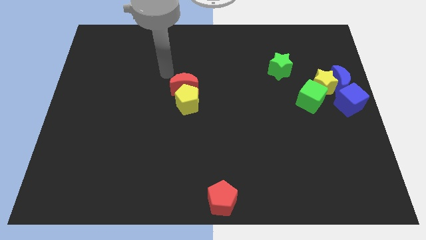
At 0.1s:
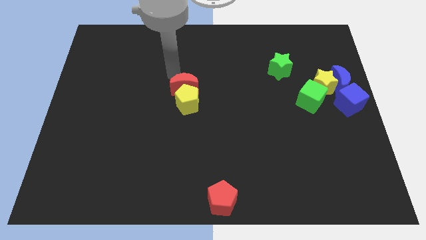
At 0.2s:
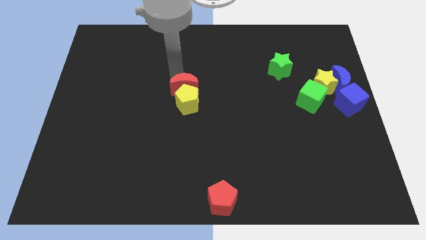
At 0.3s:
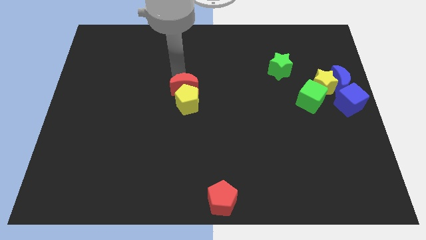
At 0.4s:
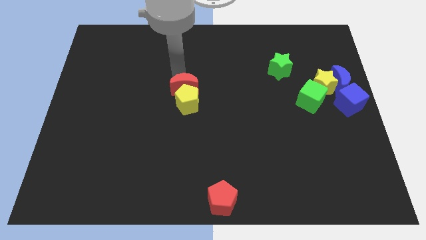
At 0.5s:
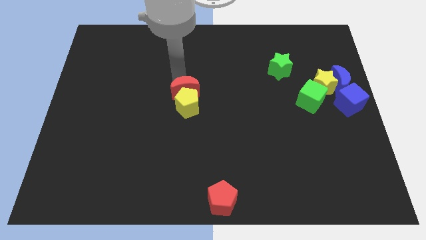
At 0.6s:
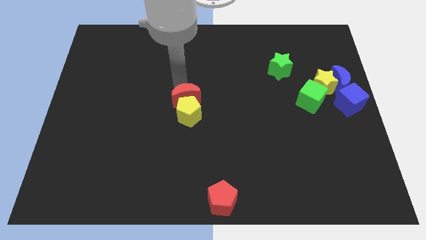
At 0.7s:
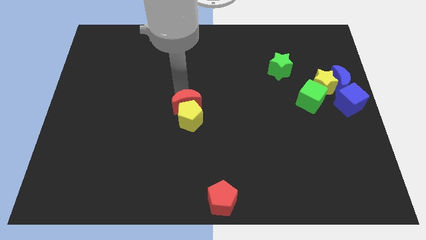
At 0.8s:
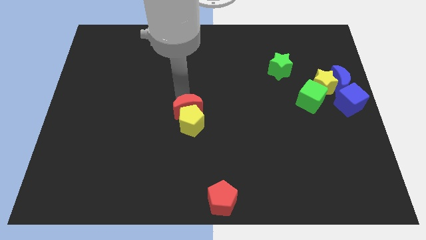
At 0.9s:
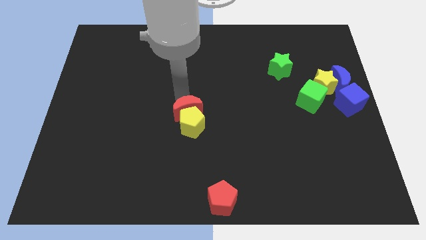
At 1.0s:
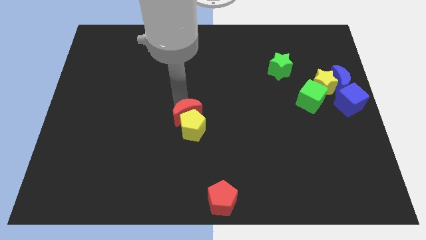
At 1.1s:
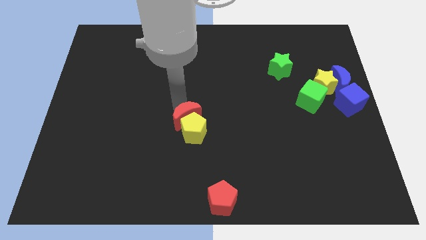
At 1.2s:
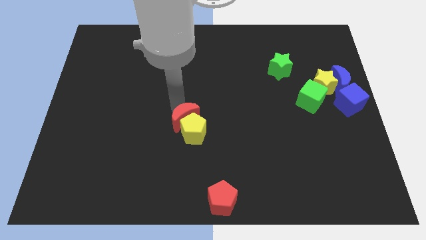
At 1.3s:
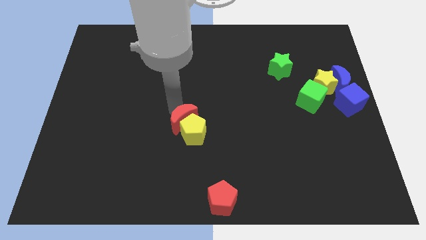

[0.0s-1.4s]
push the red crescent and yellow pentagon downwards

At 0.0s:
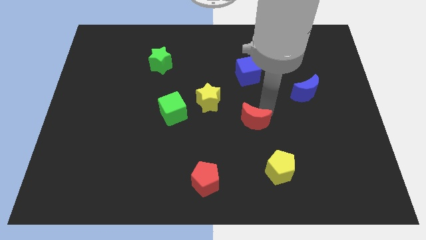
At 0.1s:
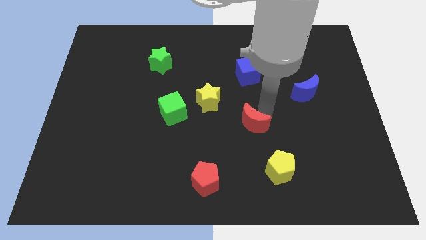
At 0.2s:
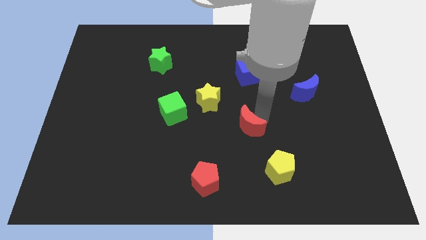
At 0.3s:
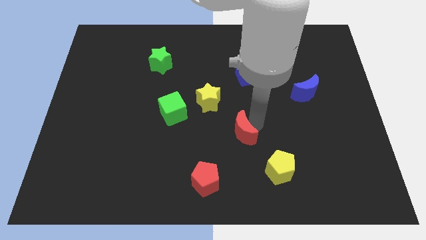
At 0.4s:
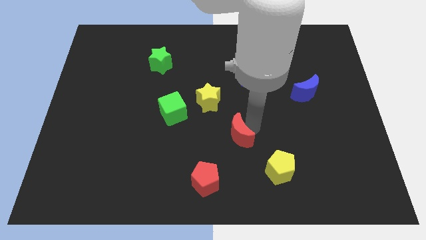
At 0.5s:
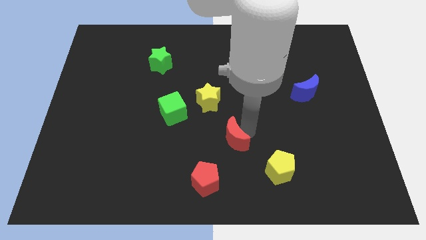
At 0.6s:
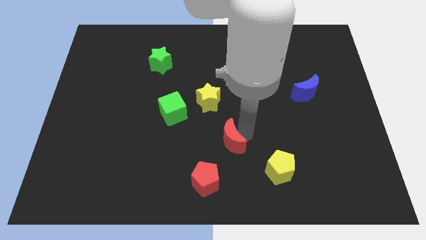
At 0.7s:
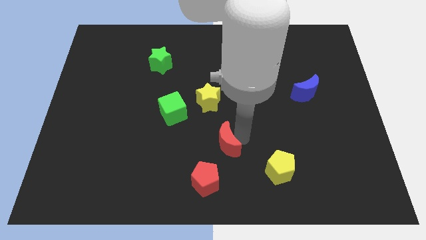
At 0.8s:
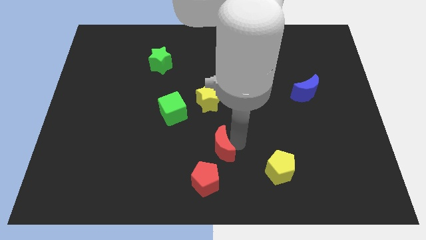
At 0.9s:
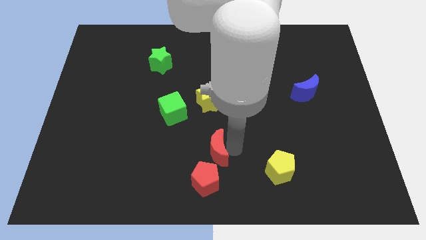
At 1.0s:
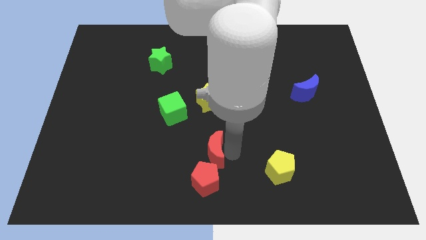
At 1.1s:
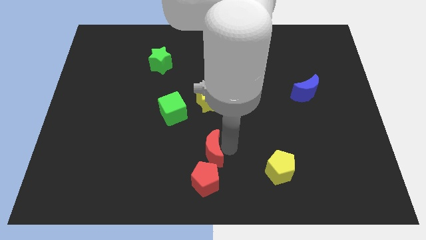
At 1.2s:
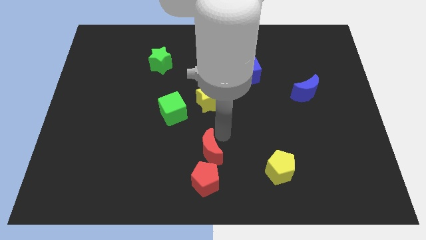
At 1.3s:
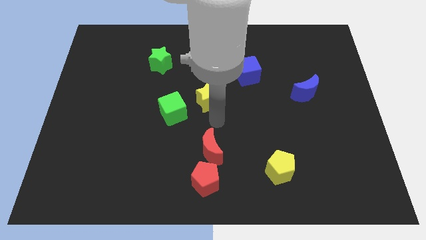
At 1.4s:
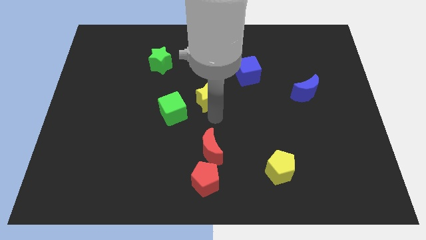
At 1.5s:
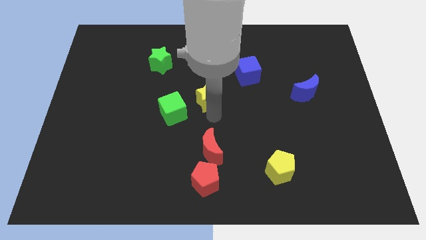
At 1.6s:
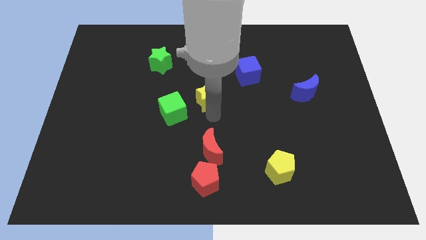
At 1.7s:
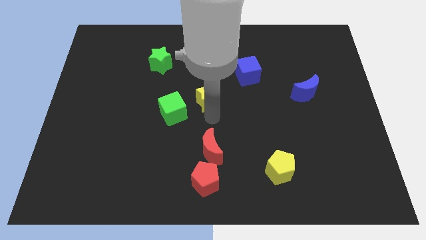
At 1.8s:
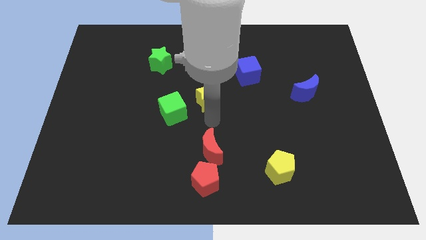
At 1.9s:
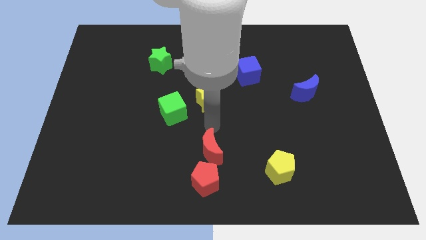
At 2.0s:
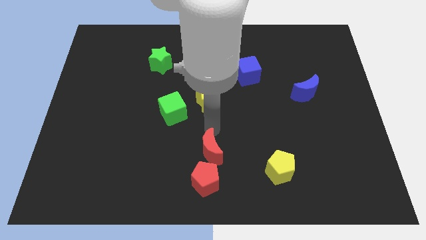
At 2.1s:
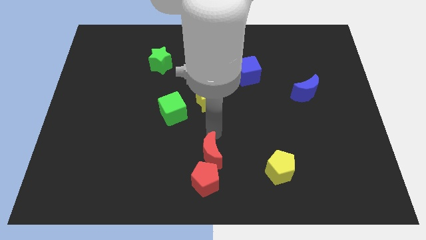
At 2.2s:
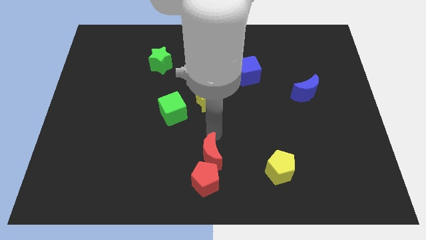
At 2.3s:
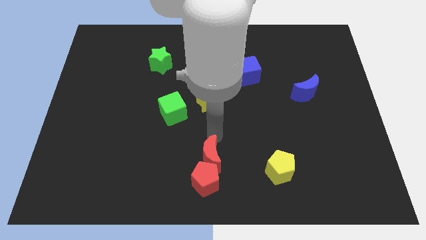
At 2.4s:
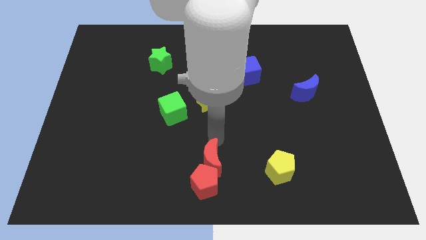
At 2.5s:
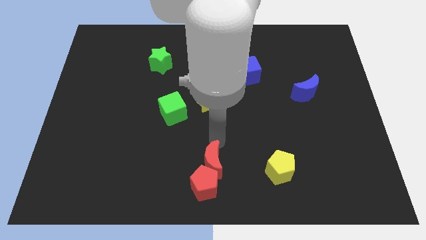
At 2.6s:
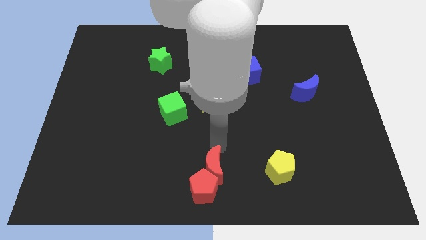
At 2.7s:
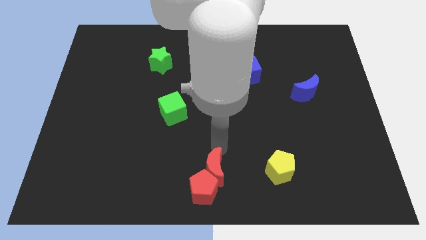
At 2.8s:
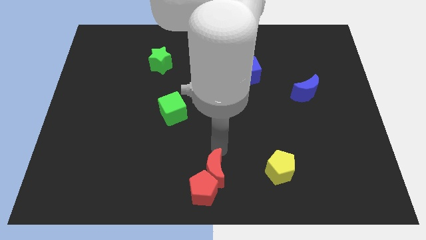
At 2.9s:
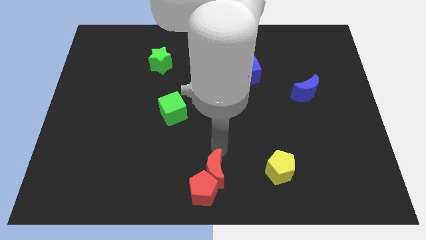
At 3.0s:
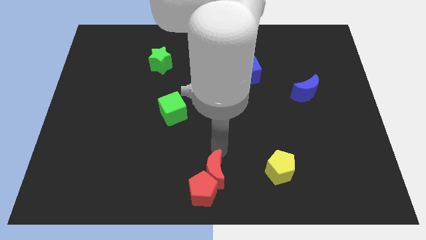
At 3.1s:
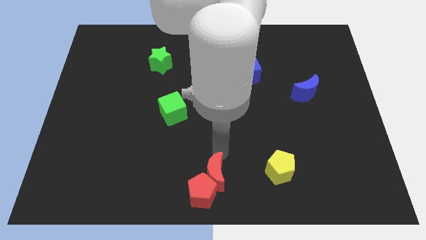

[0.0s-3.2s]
move both the red blocks towards the bottom center

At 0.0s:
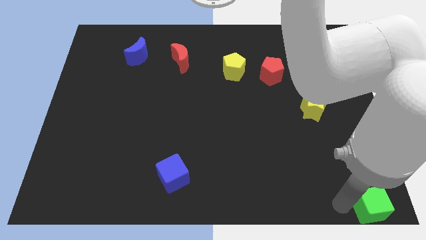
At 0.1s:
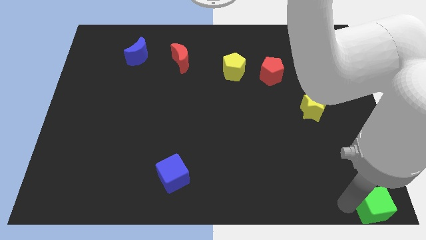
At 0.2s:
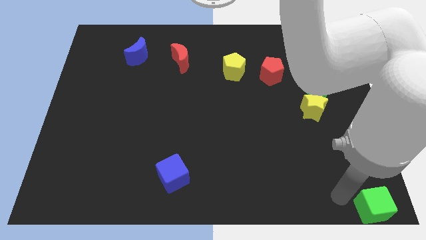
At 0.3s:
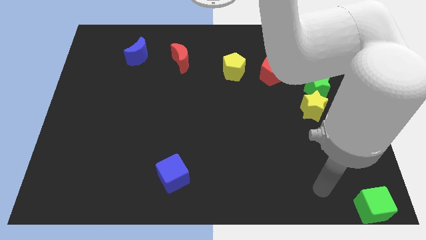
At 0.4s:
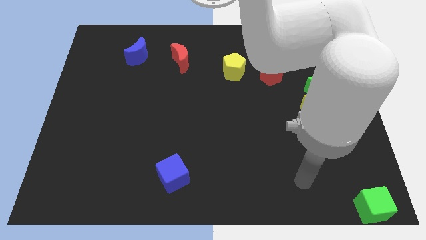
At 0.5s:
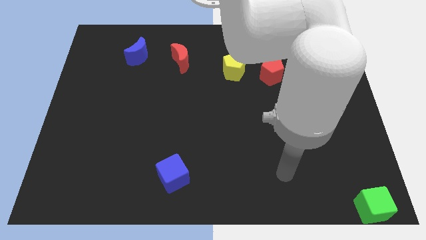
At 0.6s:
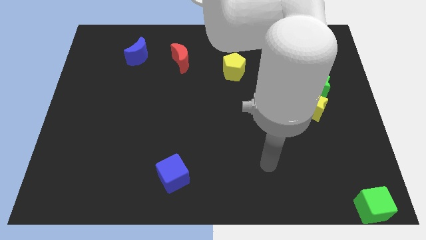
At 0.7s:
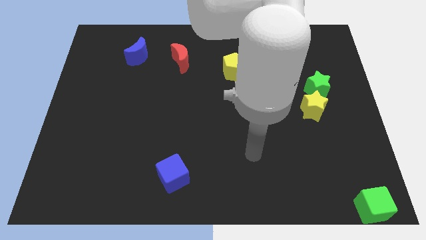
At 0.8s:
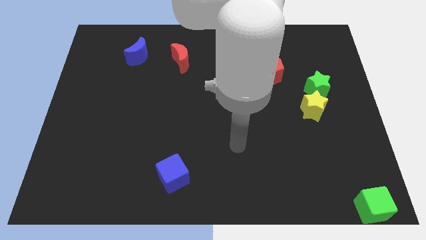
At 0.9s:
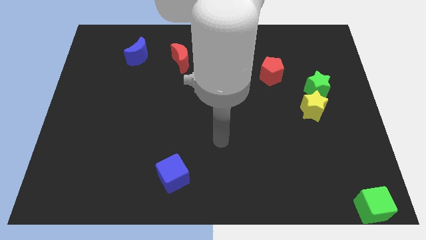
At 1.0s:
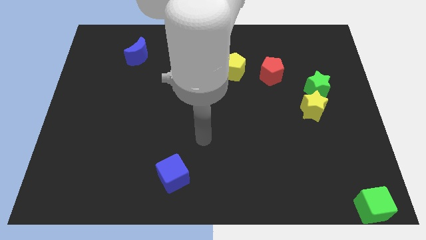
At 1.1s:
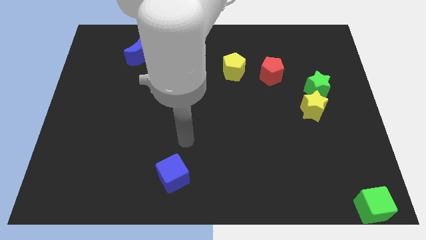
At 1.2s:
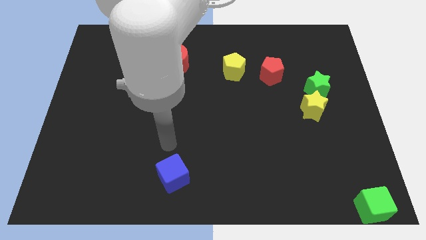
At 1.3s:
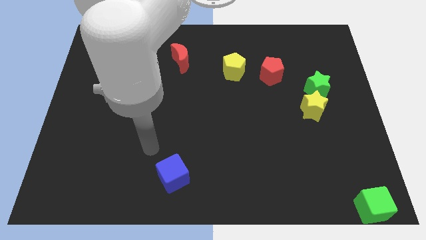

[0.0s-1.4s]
move your arm away from the green cube

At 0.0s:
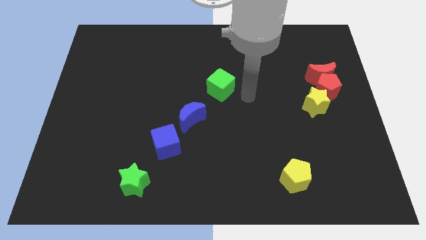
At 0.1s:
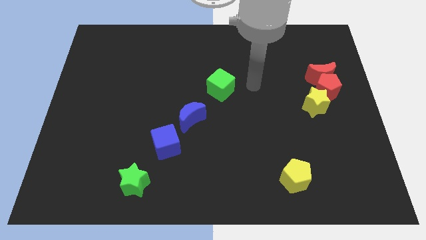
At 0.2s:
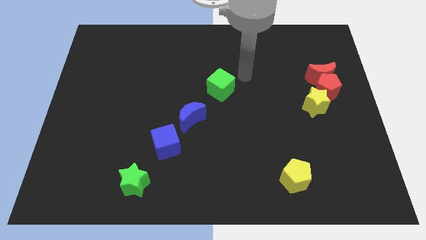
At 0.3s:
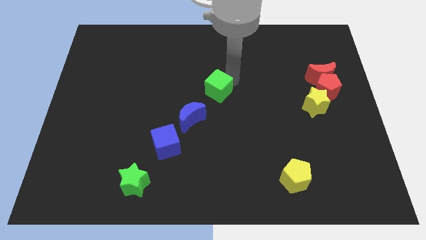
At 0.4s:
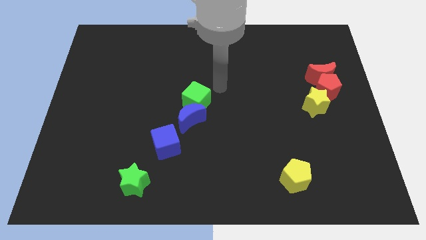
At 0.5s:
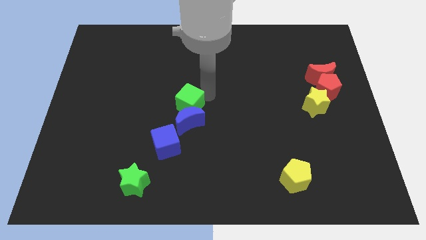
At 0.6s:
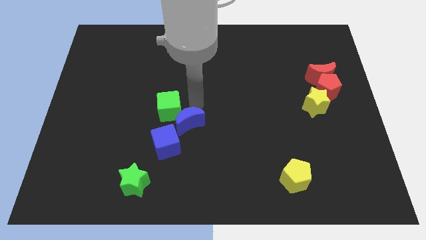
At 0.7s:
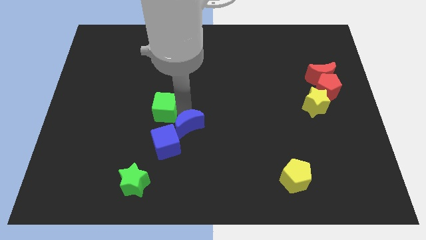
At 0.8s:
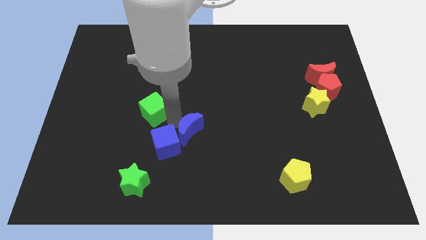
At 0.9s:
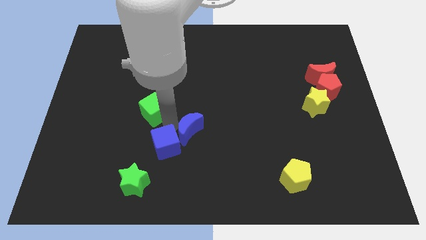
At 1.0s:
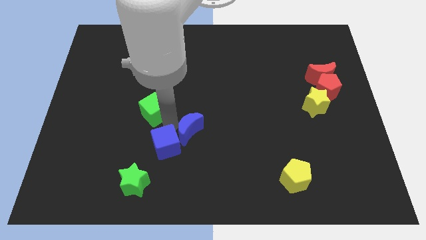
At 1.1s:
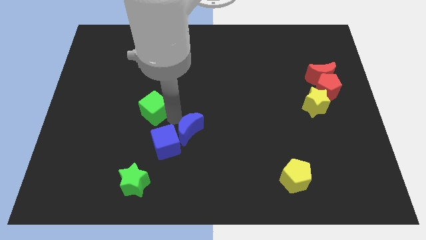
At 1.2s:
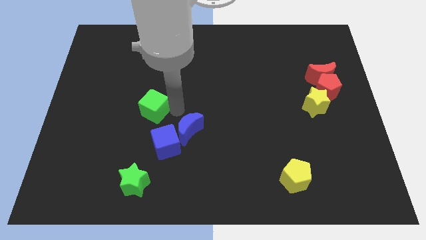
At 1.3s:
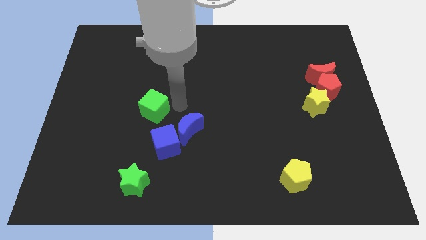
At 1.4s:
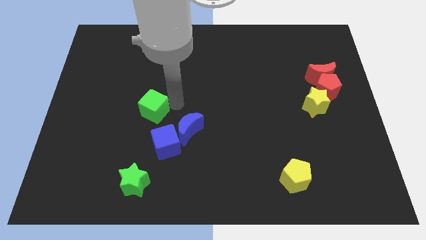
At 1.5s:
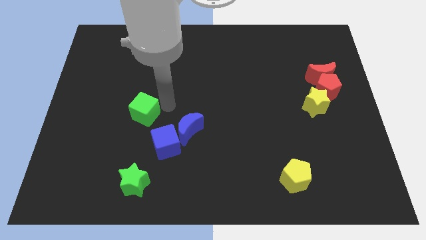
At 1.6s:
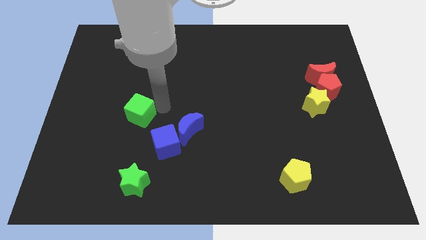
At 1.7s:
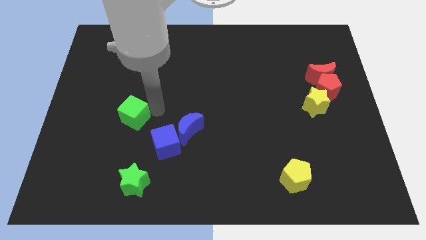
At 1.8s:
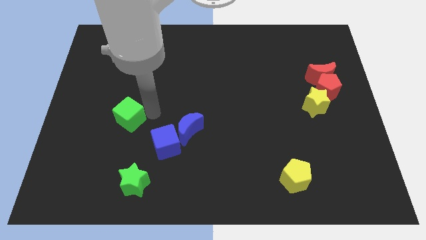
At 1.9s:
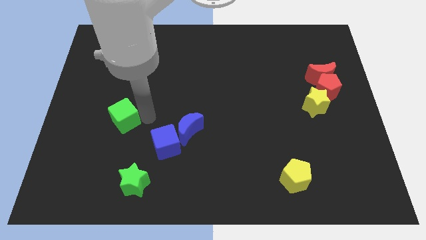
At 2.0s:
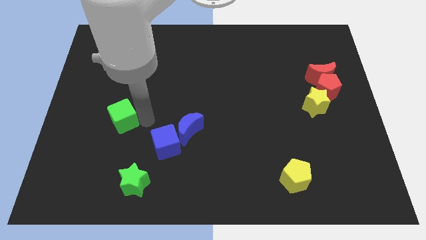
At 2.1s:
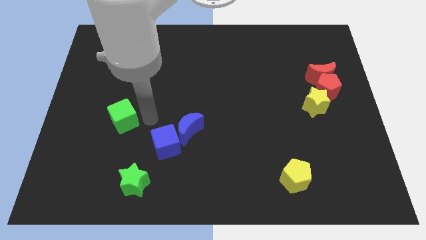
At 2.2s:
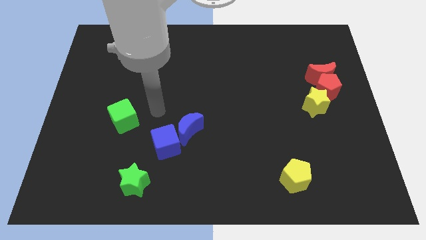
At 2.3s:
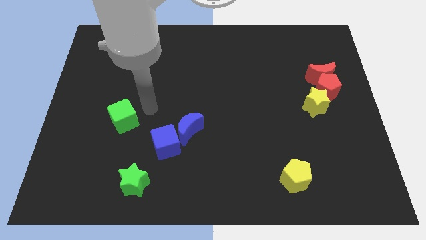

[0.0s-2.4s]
move green cube left above blue cube

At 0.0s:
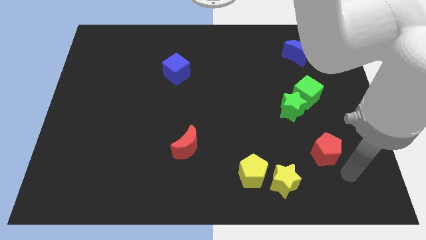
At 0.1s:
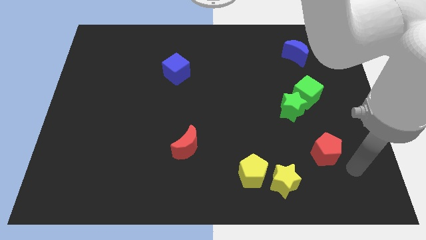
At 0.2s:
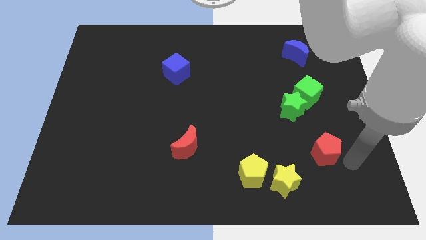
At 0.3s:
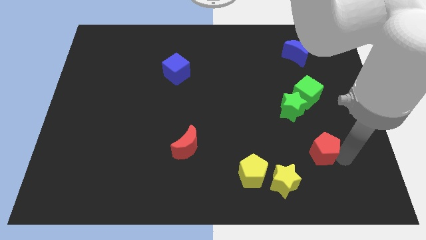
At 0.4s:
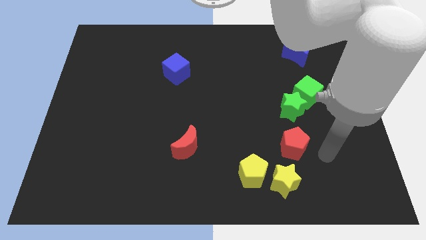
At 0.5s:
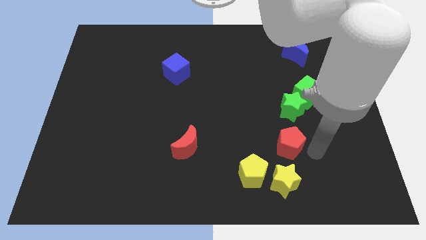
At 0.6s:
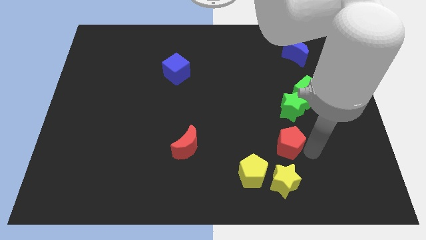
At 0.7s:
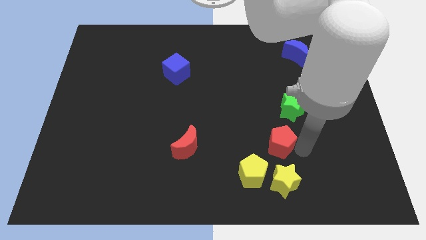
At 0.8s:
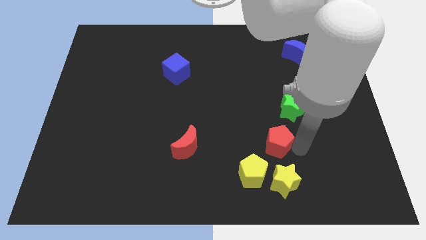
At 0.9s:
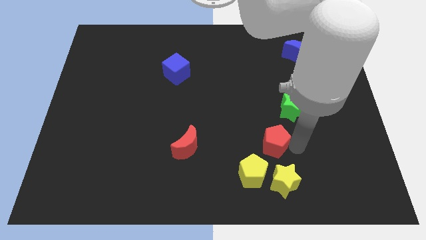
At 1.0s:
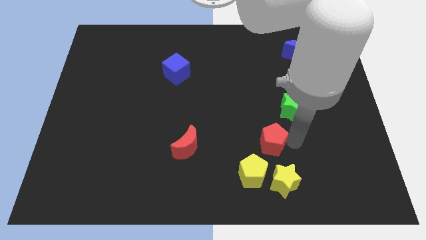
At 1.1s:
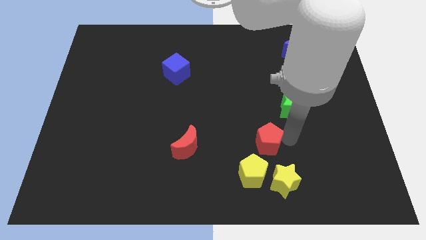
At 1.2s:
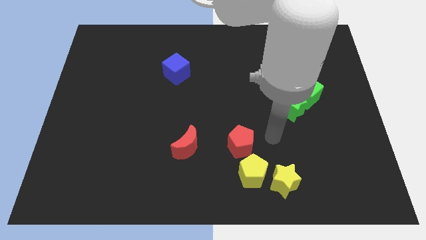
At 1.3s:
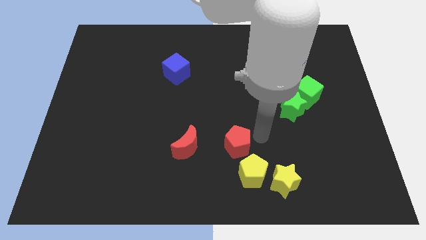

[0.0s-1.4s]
place the red pentagon to the right of the red moon
